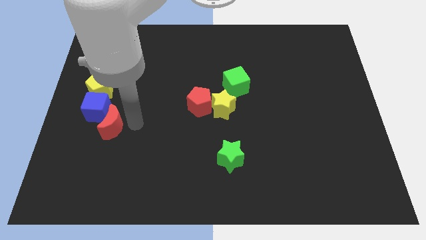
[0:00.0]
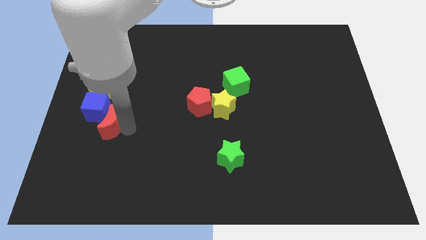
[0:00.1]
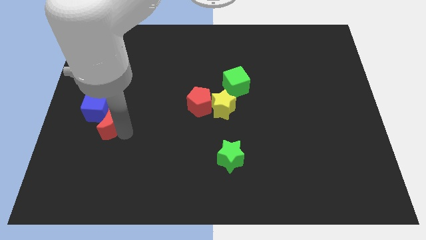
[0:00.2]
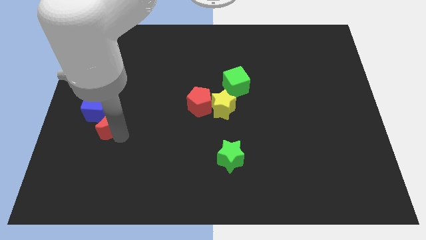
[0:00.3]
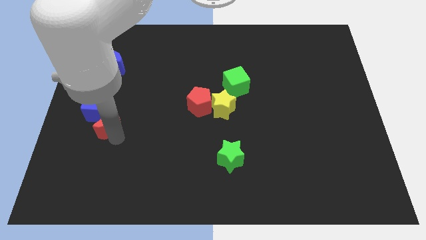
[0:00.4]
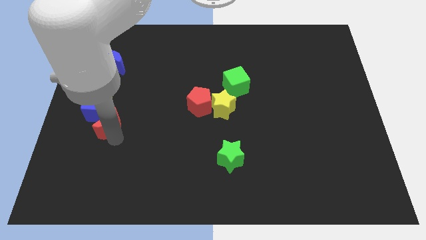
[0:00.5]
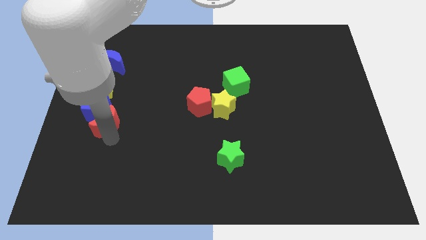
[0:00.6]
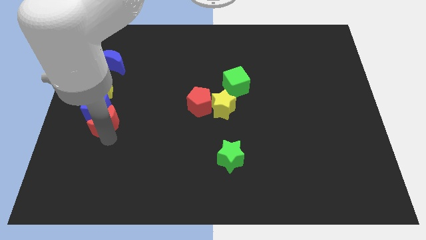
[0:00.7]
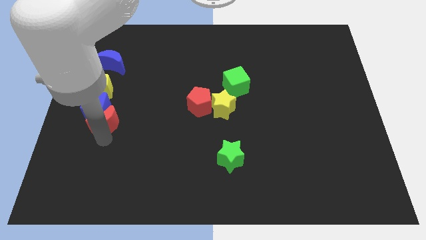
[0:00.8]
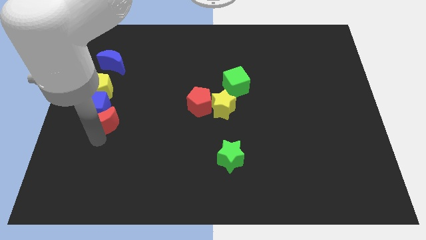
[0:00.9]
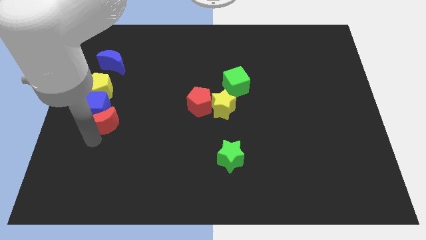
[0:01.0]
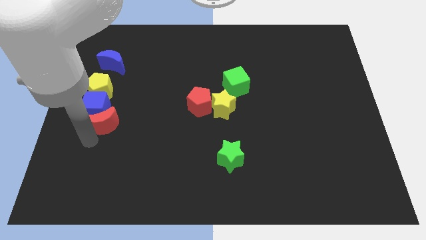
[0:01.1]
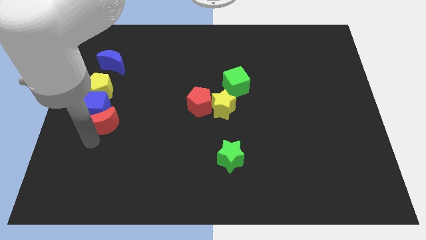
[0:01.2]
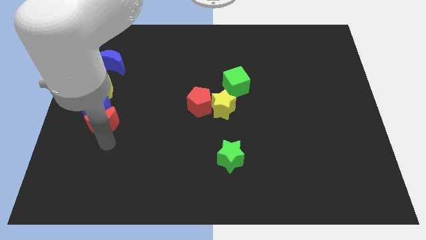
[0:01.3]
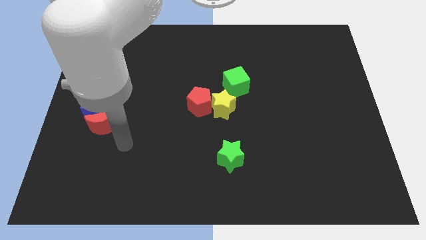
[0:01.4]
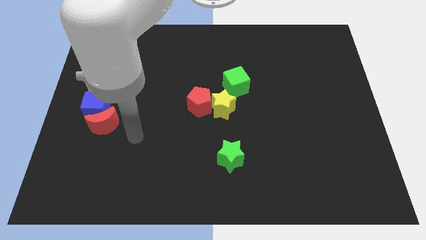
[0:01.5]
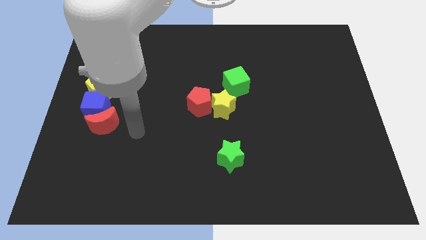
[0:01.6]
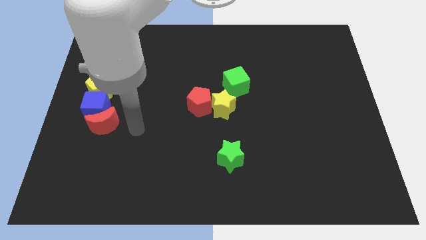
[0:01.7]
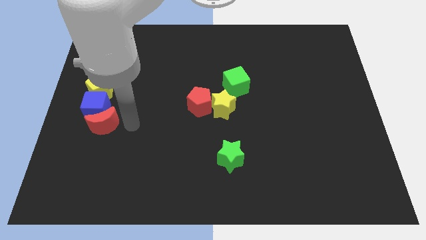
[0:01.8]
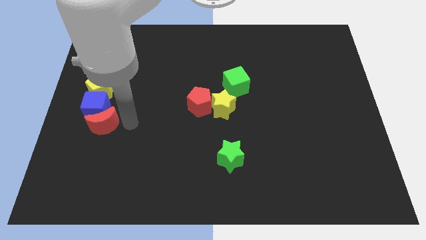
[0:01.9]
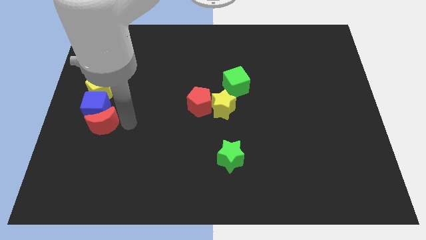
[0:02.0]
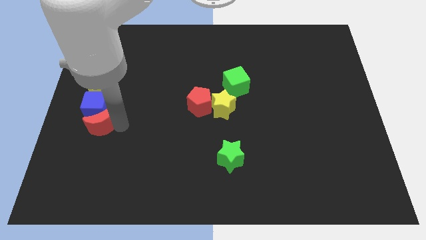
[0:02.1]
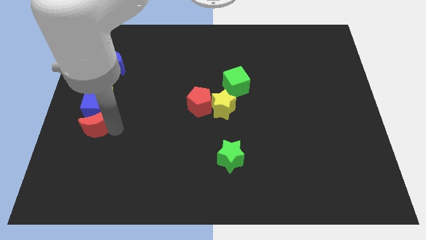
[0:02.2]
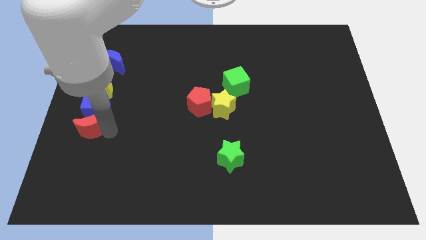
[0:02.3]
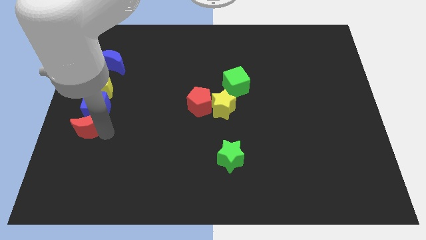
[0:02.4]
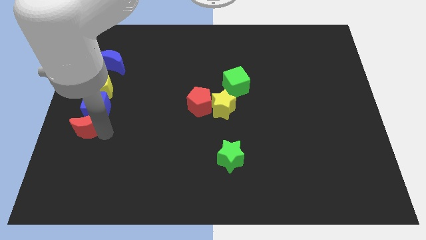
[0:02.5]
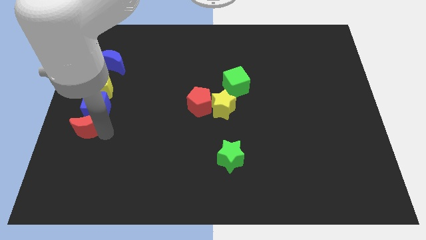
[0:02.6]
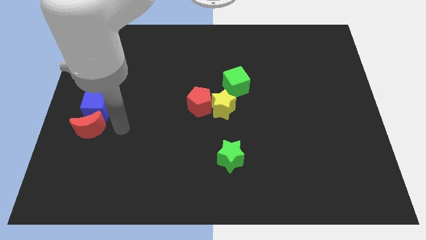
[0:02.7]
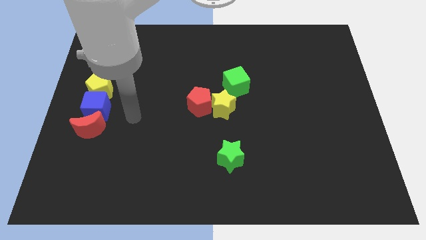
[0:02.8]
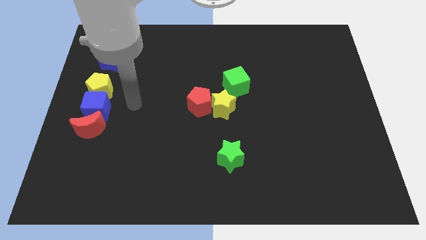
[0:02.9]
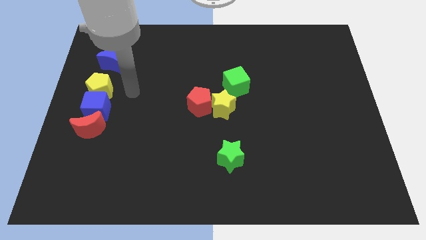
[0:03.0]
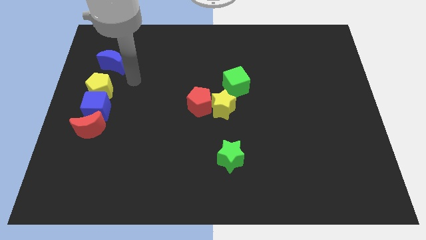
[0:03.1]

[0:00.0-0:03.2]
move the red moon below to the blue cube

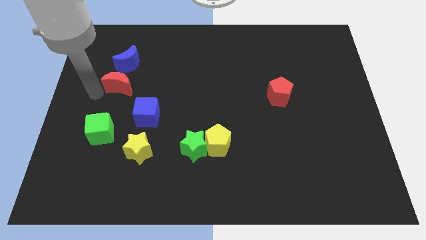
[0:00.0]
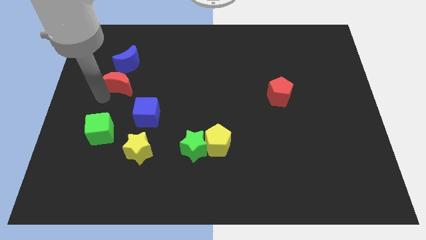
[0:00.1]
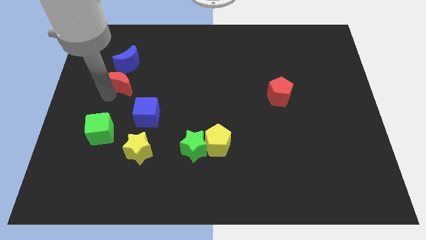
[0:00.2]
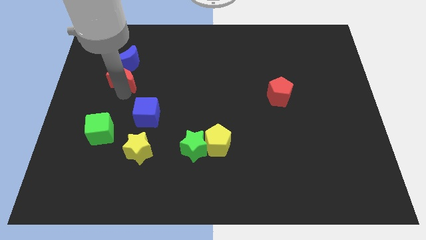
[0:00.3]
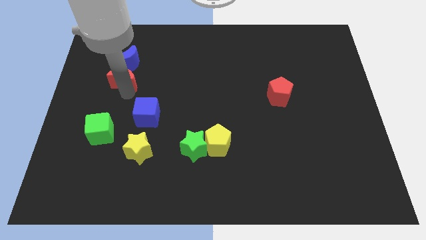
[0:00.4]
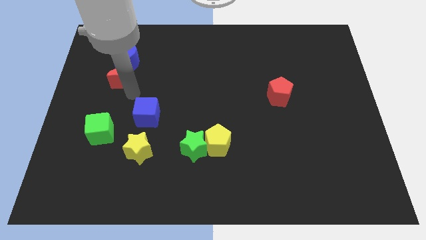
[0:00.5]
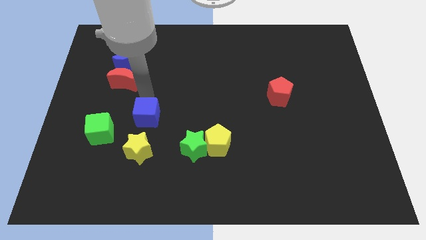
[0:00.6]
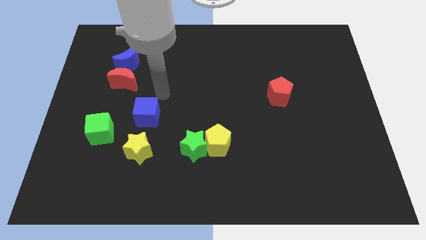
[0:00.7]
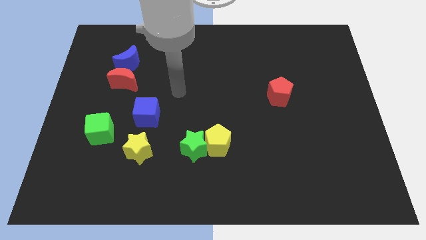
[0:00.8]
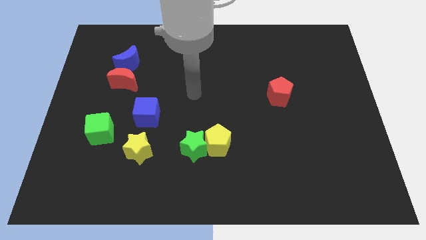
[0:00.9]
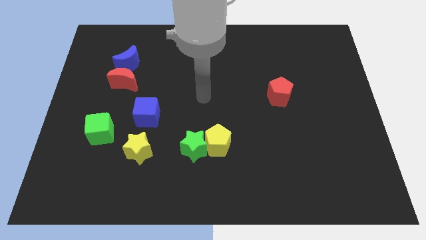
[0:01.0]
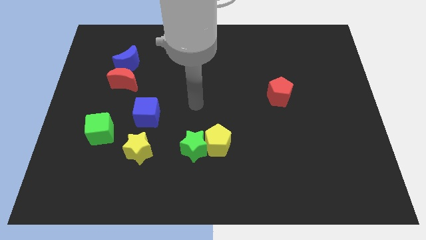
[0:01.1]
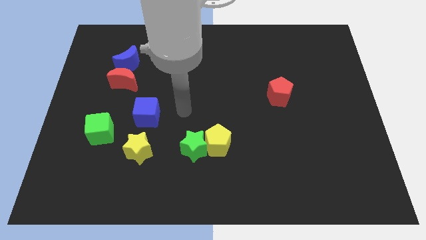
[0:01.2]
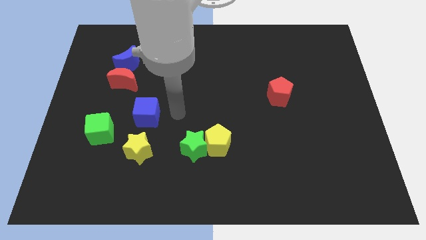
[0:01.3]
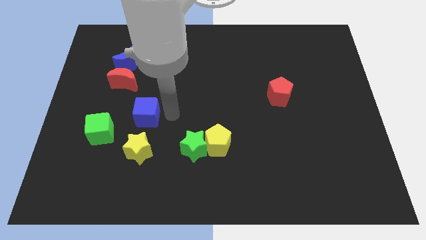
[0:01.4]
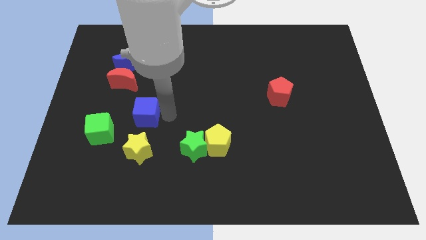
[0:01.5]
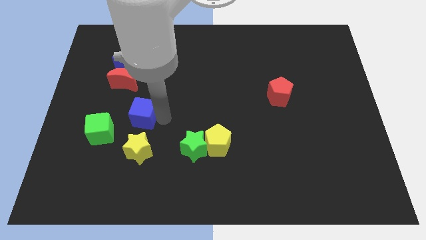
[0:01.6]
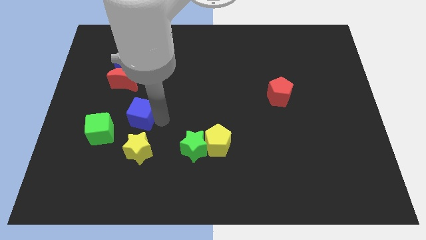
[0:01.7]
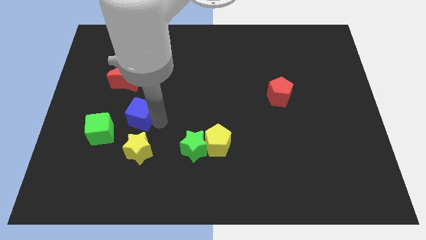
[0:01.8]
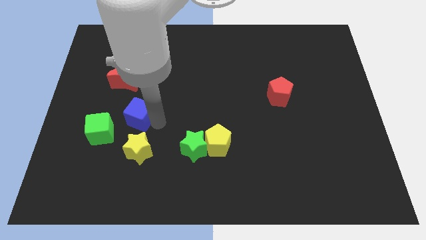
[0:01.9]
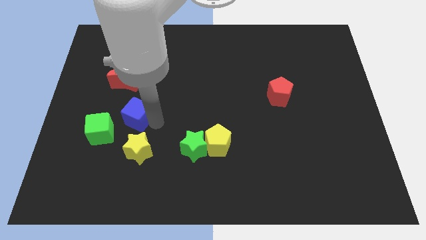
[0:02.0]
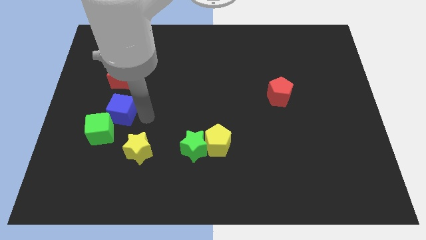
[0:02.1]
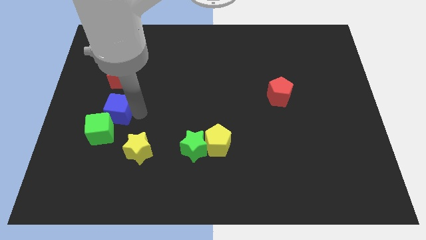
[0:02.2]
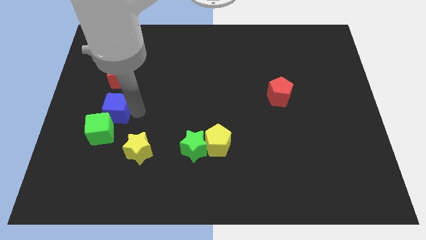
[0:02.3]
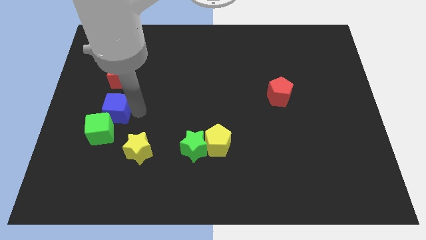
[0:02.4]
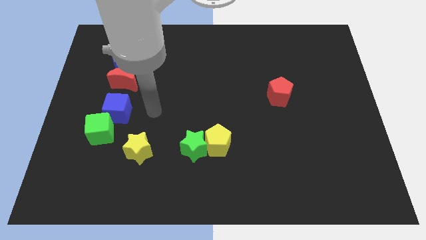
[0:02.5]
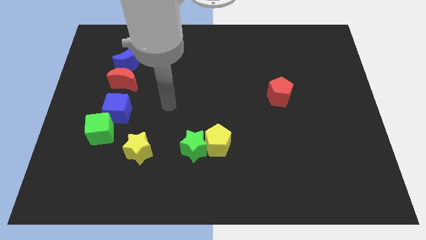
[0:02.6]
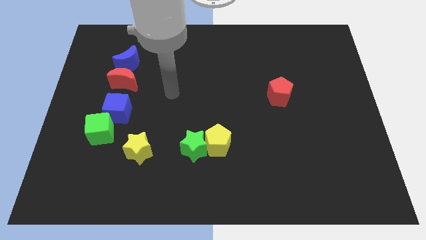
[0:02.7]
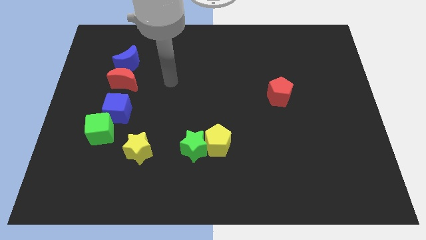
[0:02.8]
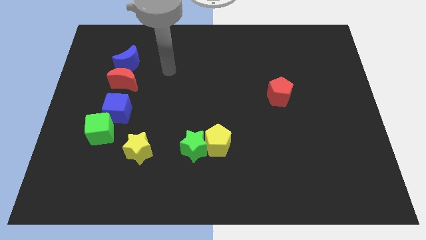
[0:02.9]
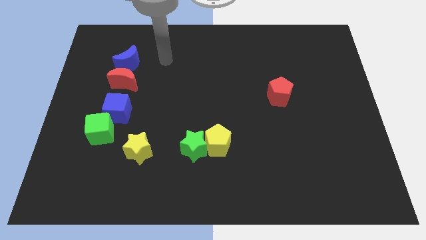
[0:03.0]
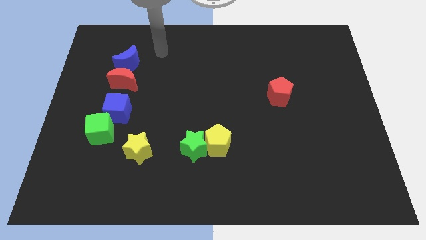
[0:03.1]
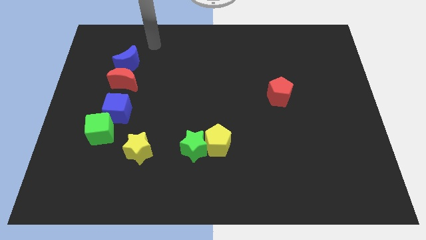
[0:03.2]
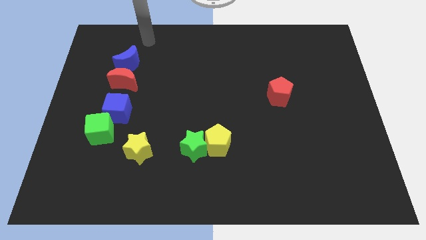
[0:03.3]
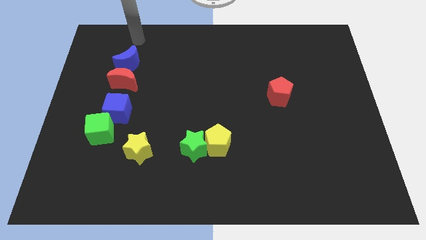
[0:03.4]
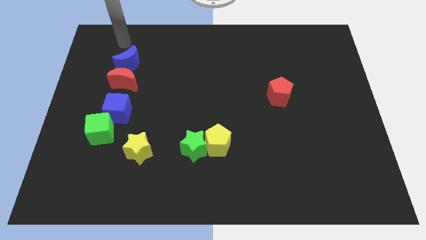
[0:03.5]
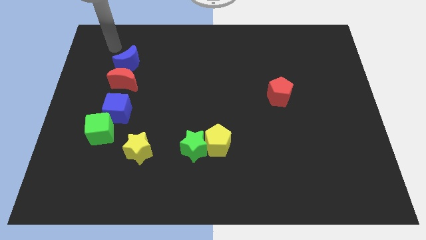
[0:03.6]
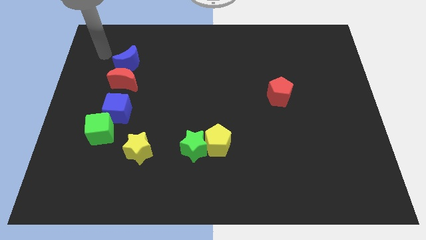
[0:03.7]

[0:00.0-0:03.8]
push blue cube into the green cube

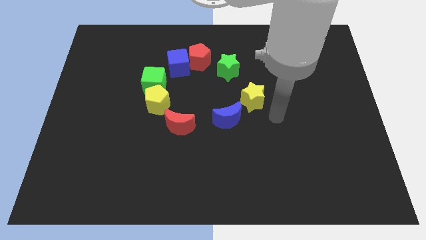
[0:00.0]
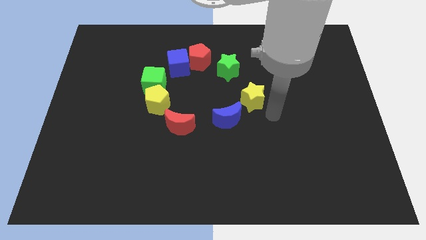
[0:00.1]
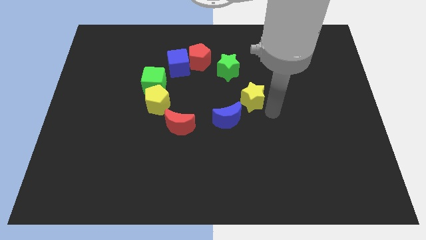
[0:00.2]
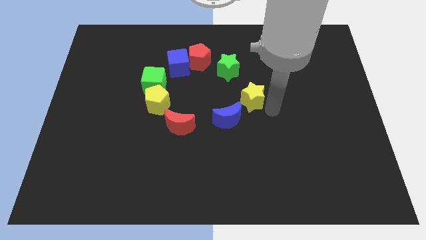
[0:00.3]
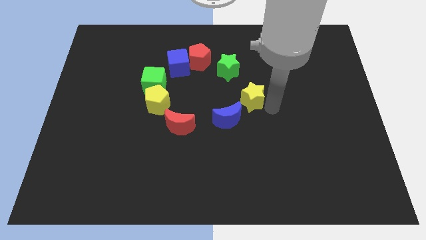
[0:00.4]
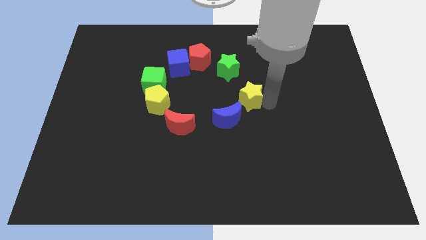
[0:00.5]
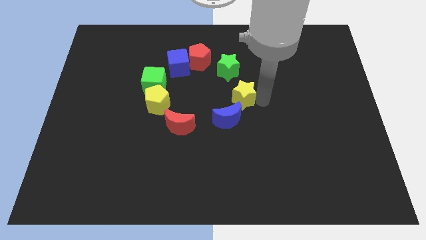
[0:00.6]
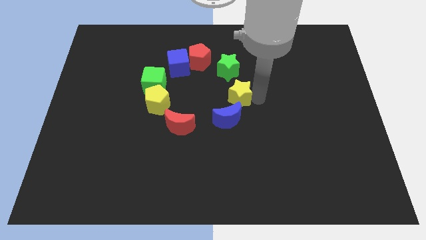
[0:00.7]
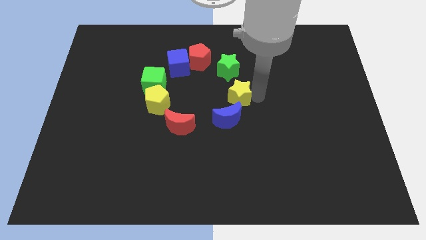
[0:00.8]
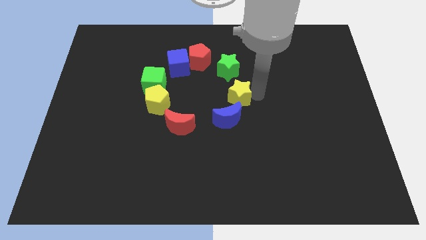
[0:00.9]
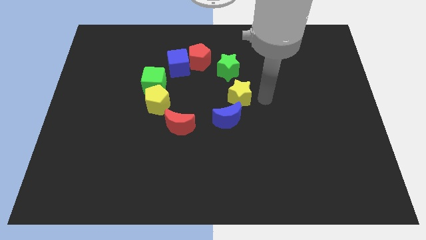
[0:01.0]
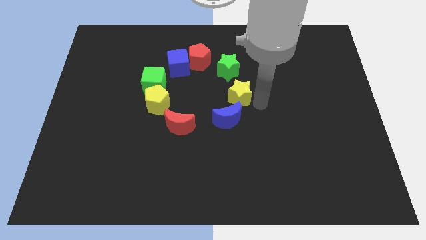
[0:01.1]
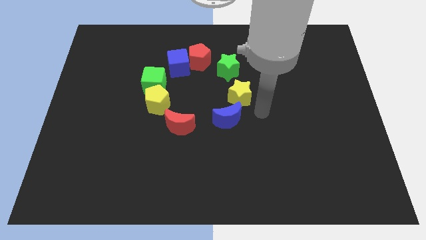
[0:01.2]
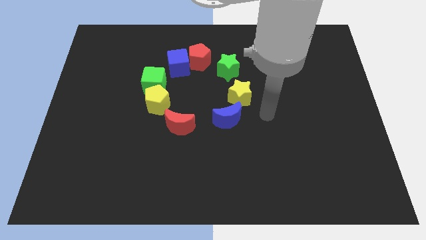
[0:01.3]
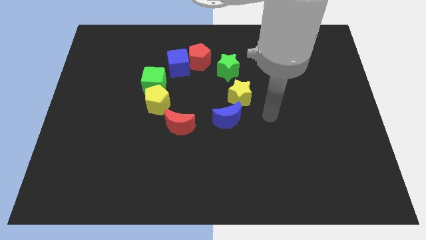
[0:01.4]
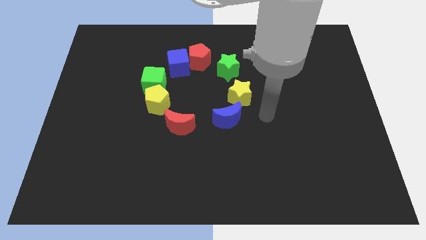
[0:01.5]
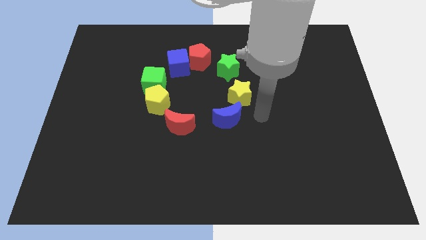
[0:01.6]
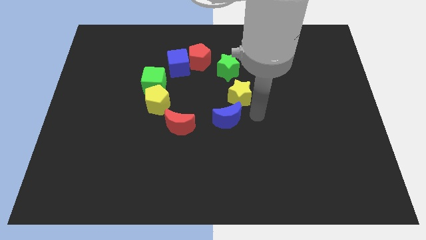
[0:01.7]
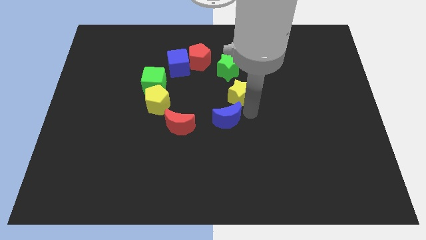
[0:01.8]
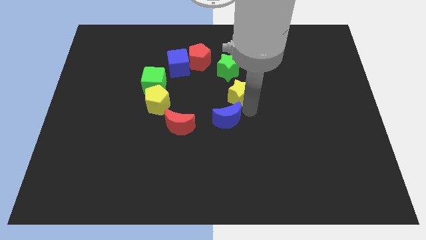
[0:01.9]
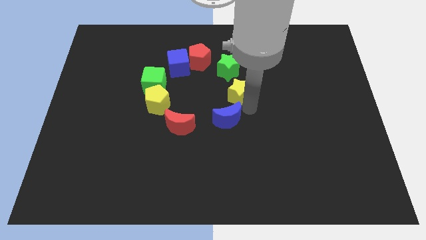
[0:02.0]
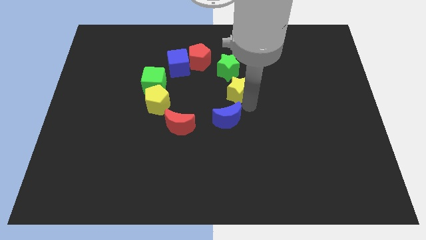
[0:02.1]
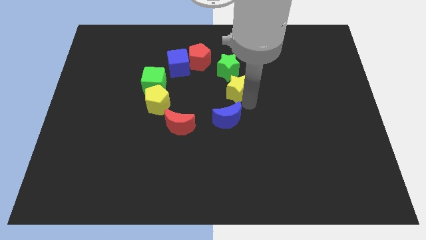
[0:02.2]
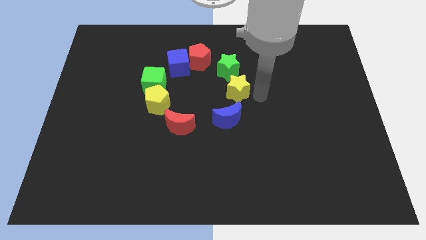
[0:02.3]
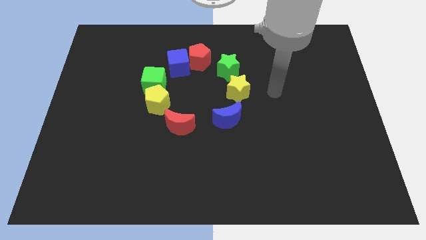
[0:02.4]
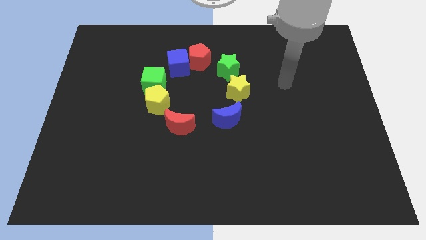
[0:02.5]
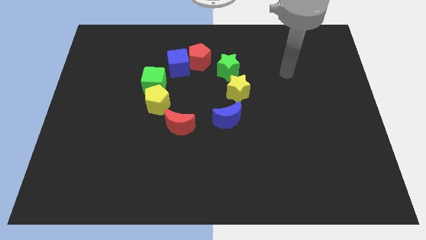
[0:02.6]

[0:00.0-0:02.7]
push the yellow star close to the green star
